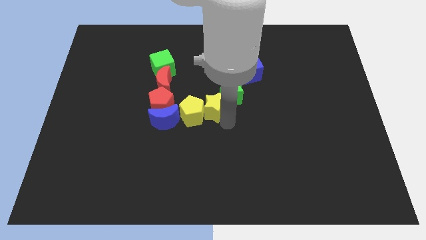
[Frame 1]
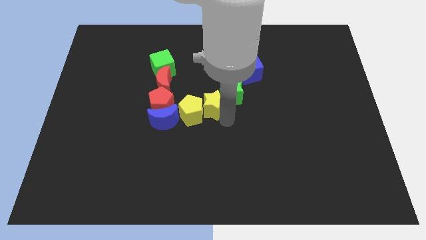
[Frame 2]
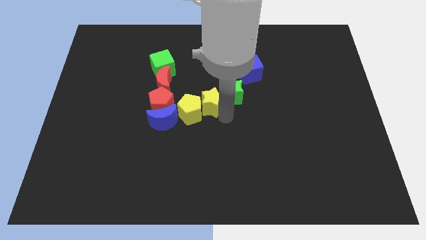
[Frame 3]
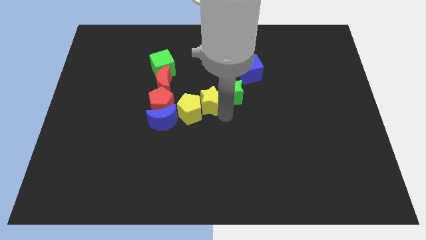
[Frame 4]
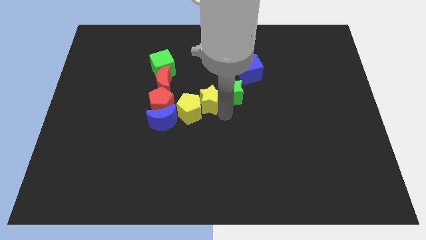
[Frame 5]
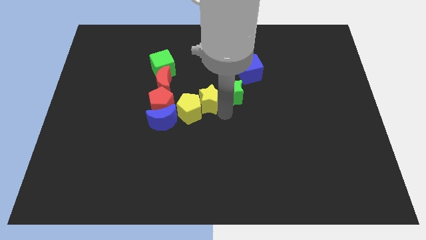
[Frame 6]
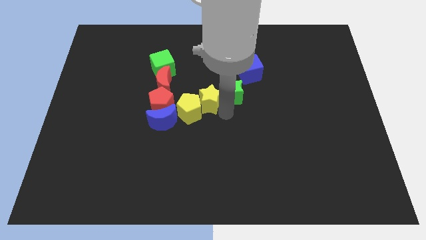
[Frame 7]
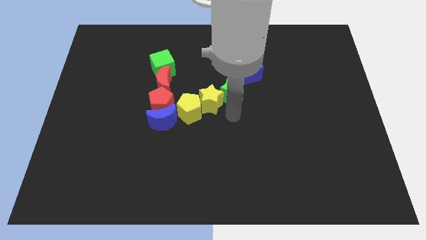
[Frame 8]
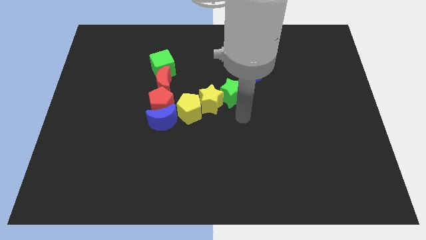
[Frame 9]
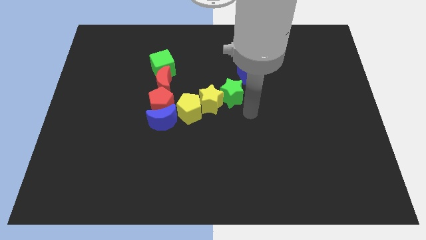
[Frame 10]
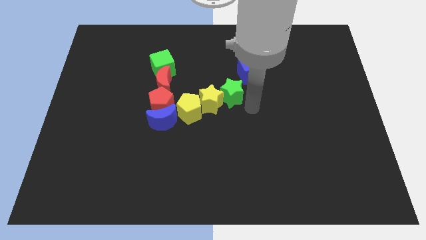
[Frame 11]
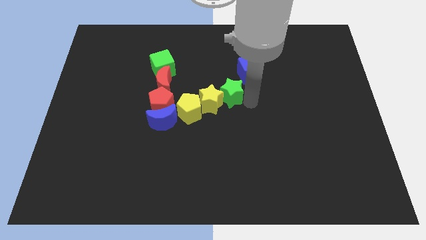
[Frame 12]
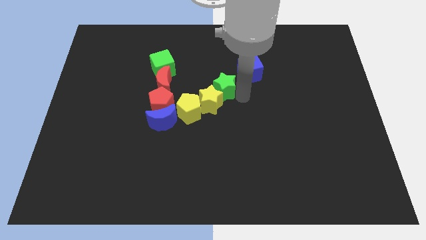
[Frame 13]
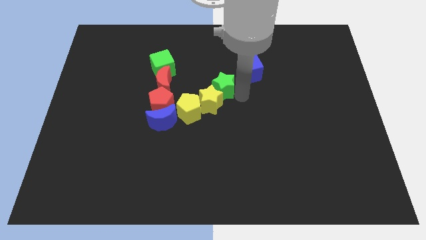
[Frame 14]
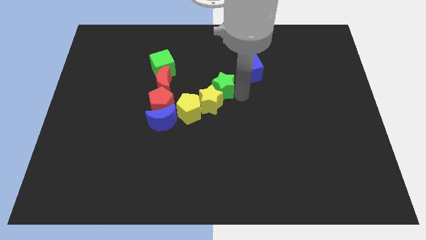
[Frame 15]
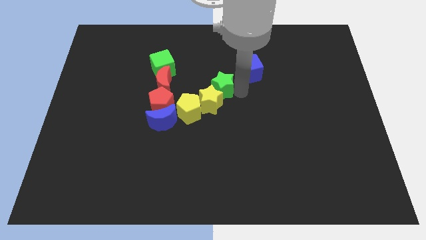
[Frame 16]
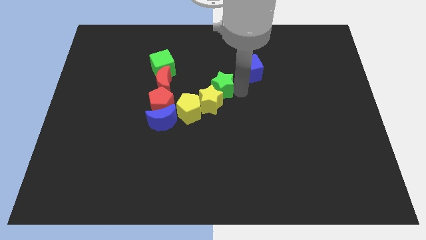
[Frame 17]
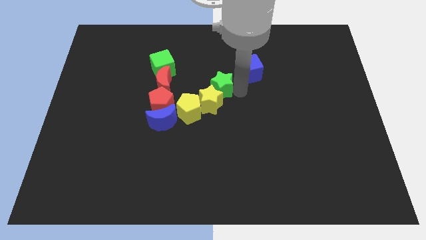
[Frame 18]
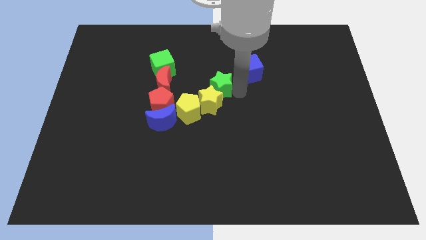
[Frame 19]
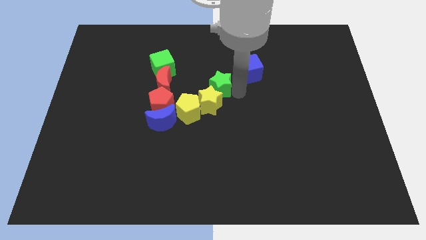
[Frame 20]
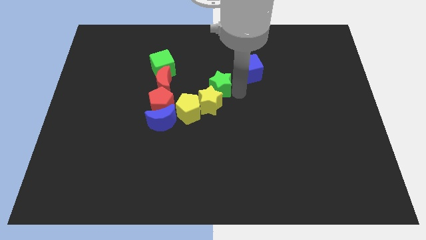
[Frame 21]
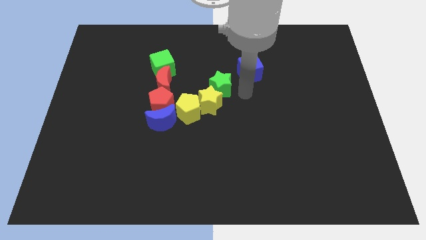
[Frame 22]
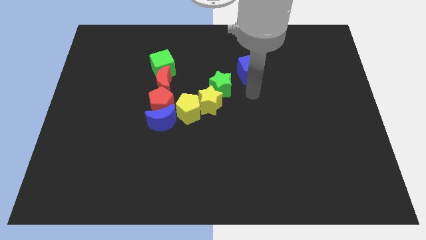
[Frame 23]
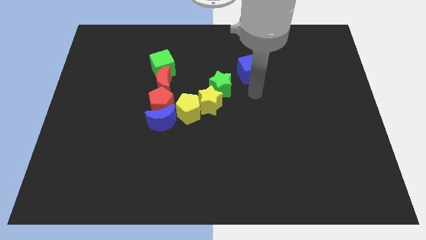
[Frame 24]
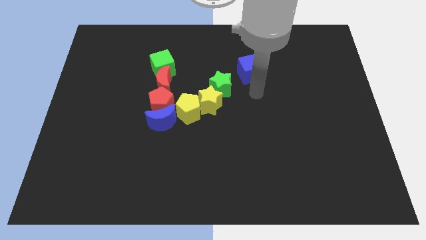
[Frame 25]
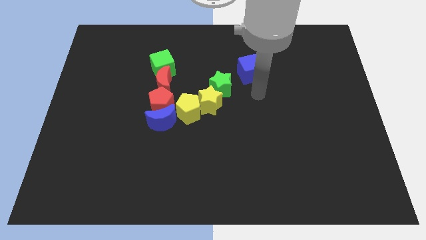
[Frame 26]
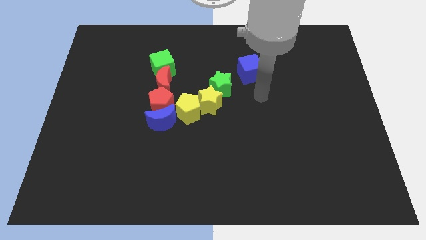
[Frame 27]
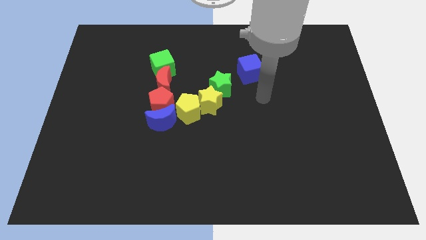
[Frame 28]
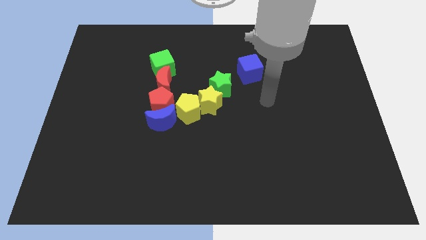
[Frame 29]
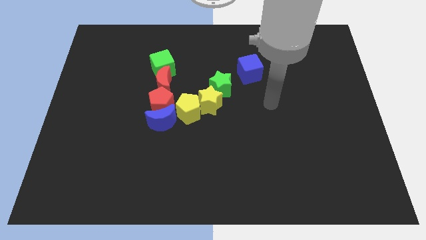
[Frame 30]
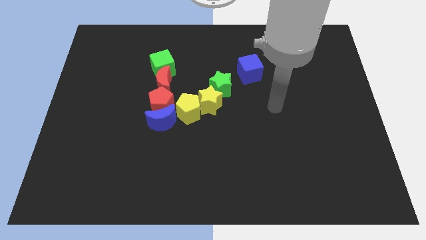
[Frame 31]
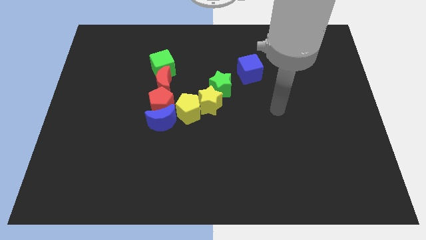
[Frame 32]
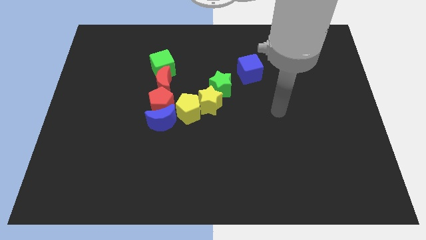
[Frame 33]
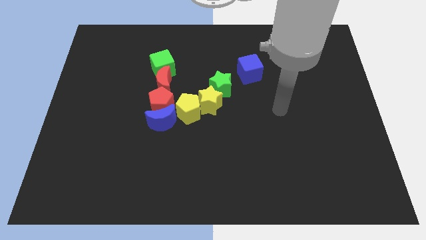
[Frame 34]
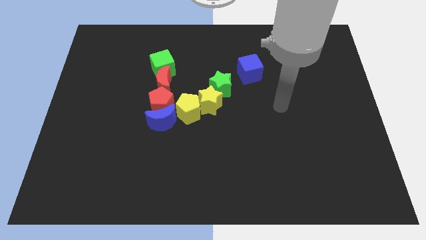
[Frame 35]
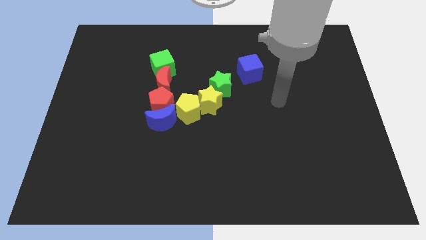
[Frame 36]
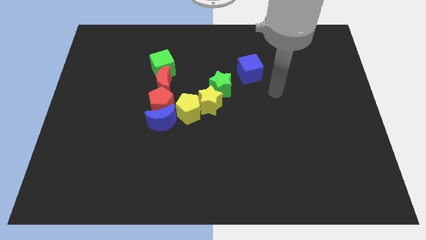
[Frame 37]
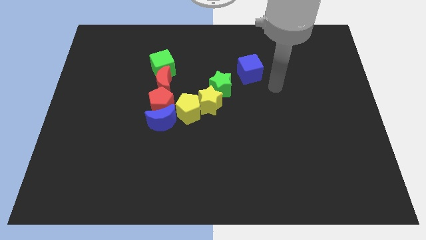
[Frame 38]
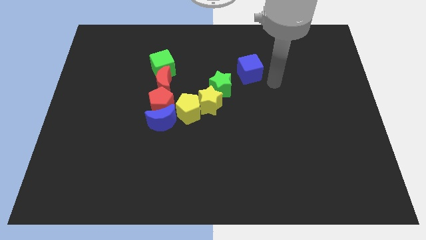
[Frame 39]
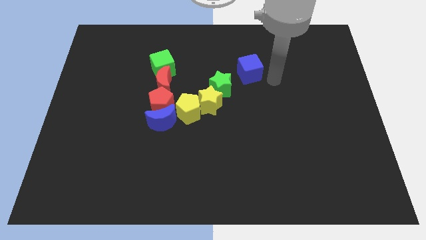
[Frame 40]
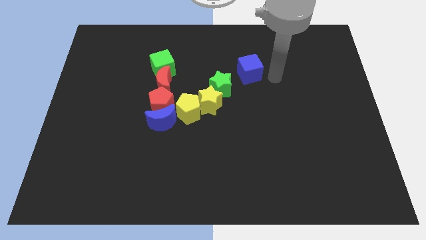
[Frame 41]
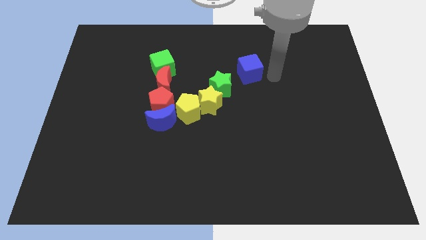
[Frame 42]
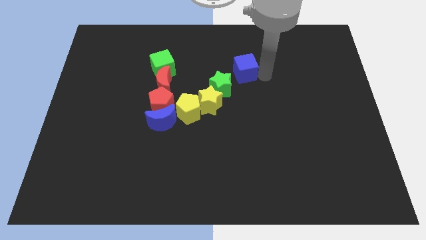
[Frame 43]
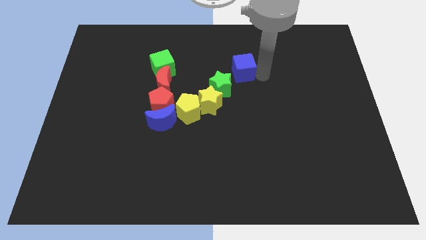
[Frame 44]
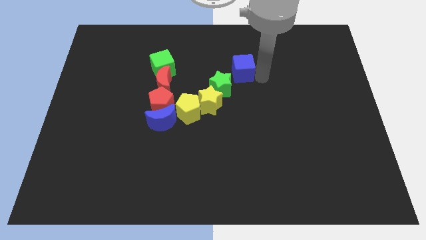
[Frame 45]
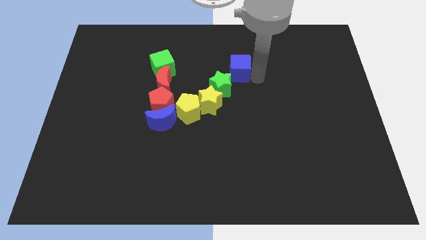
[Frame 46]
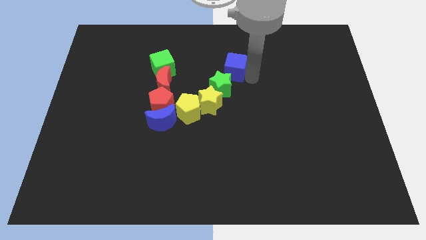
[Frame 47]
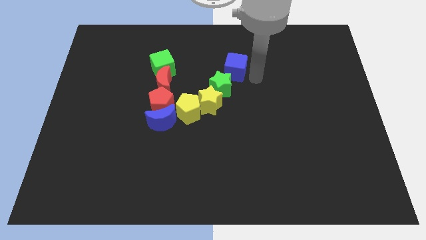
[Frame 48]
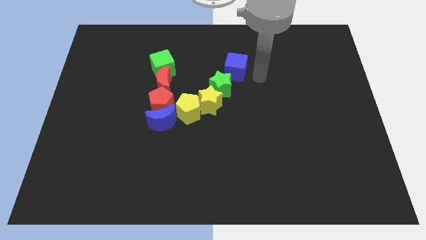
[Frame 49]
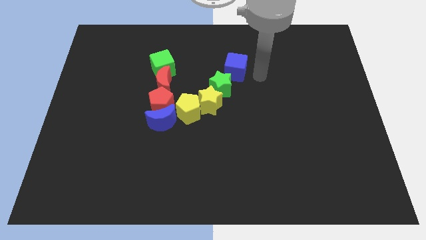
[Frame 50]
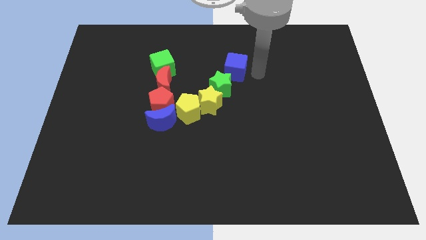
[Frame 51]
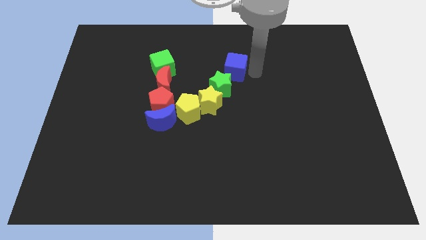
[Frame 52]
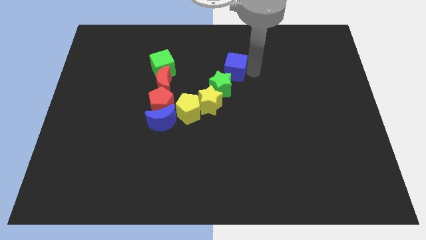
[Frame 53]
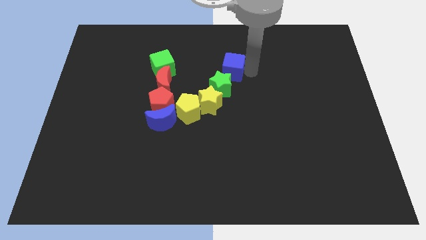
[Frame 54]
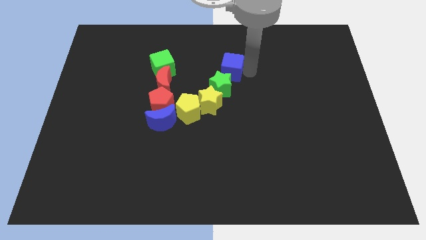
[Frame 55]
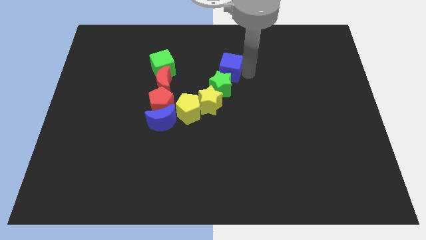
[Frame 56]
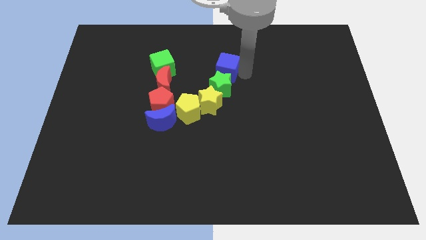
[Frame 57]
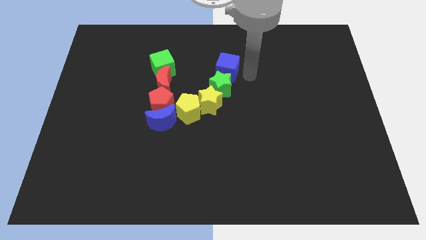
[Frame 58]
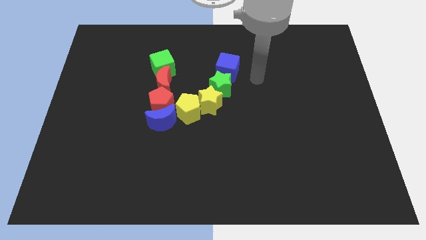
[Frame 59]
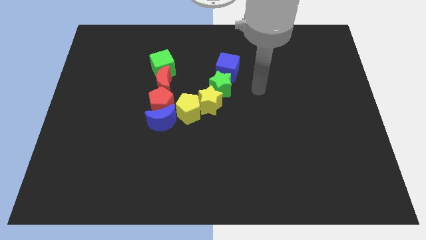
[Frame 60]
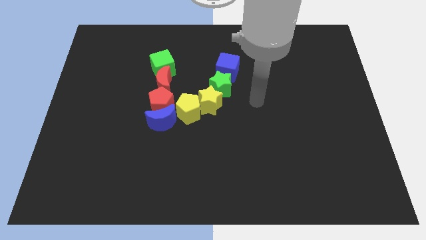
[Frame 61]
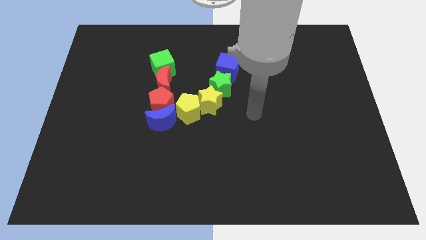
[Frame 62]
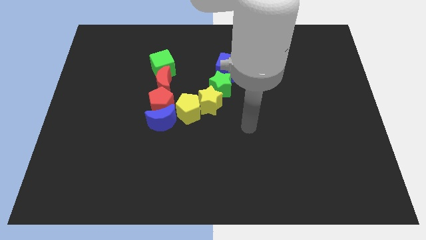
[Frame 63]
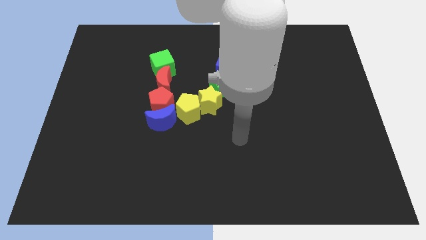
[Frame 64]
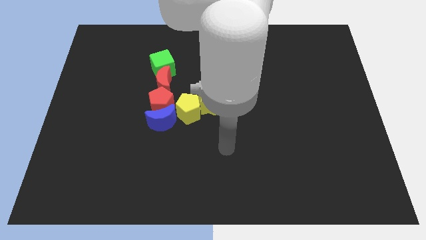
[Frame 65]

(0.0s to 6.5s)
move the group of blocks

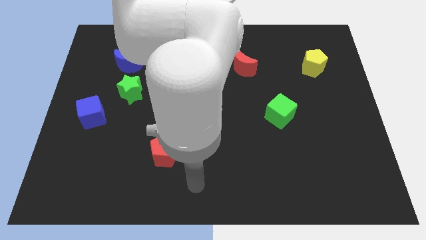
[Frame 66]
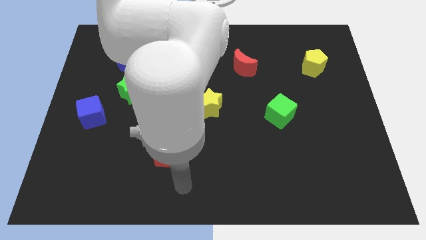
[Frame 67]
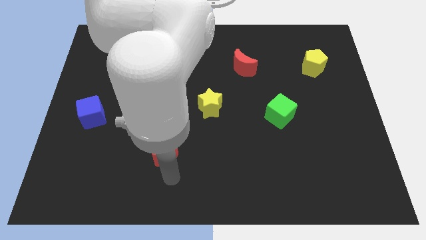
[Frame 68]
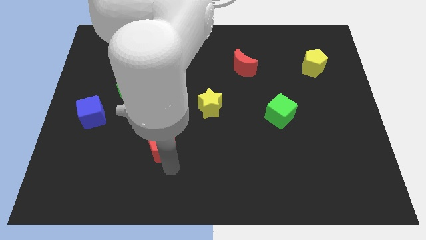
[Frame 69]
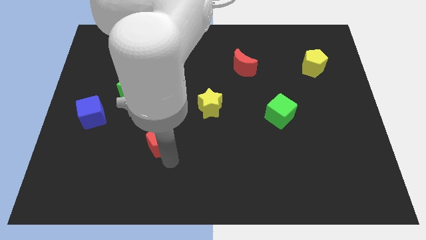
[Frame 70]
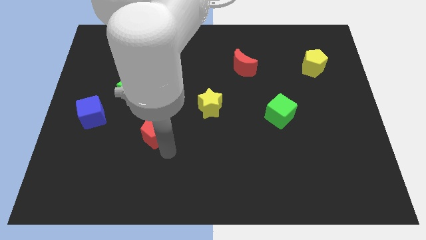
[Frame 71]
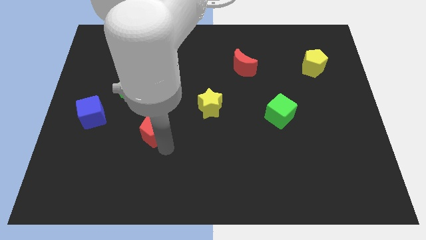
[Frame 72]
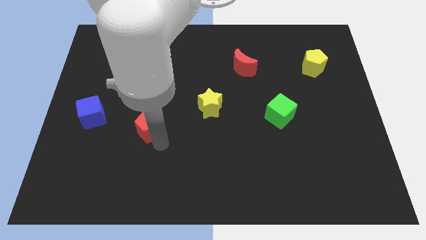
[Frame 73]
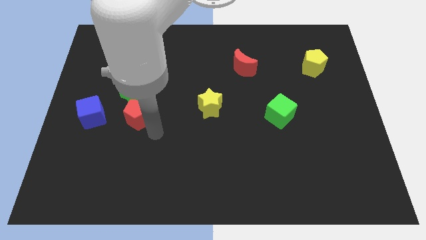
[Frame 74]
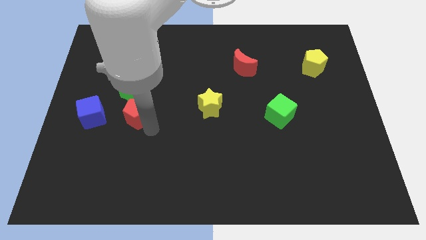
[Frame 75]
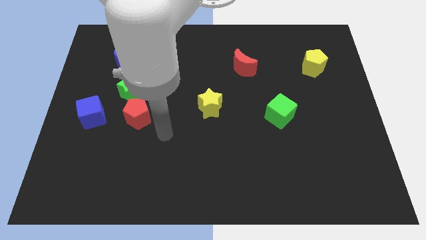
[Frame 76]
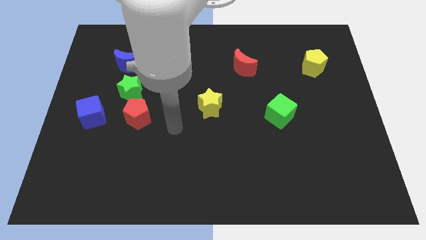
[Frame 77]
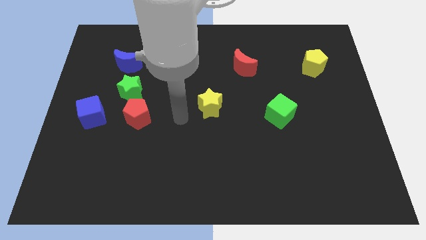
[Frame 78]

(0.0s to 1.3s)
drag the red pentagon close to the green star

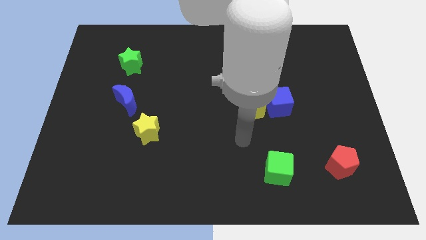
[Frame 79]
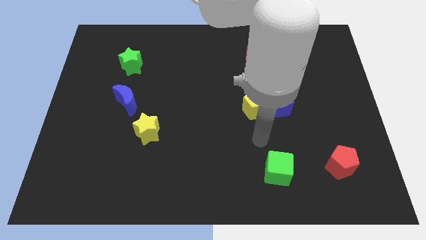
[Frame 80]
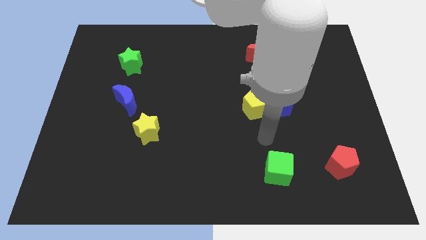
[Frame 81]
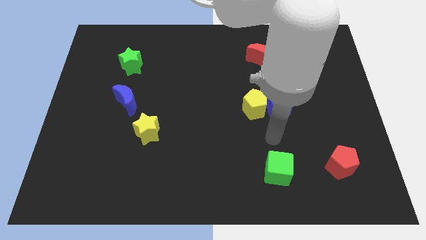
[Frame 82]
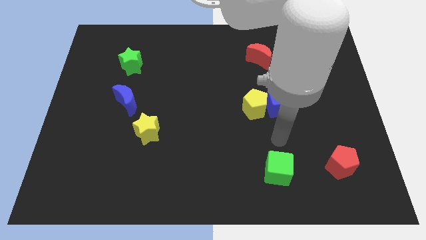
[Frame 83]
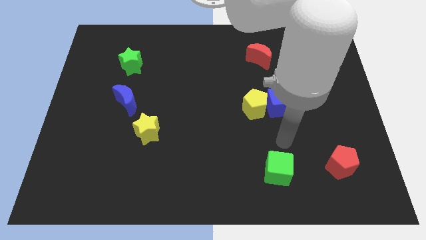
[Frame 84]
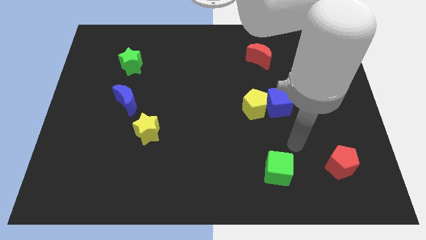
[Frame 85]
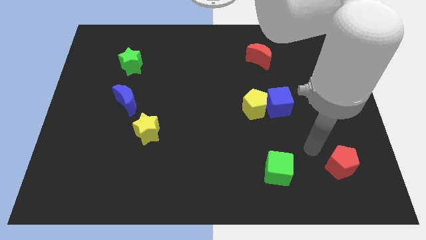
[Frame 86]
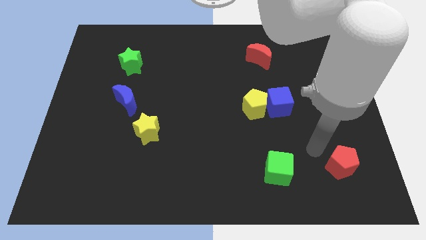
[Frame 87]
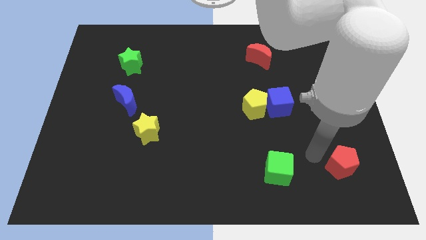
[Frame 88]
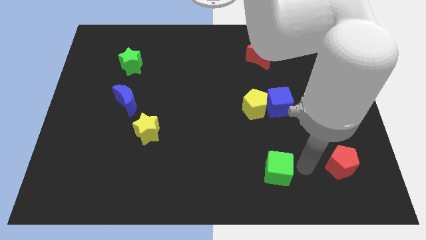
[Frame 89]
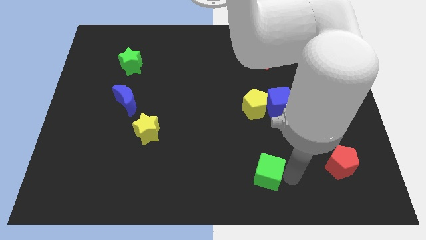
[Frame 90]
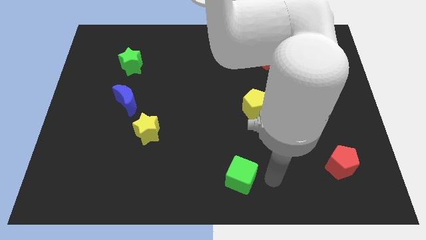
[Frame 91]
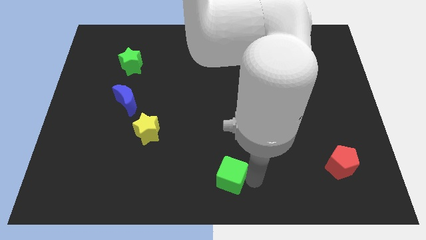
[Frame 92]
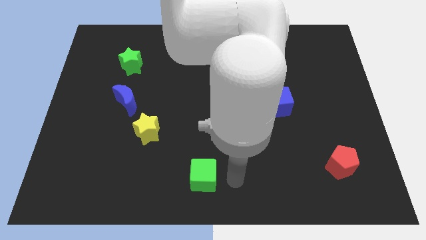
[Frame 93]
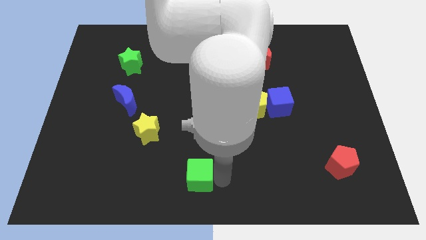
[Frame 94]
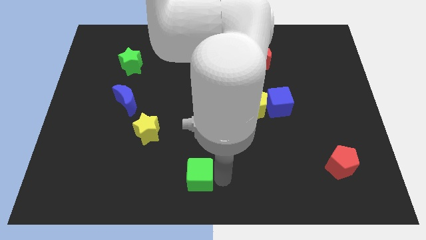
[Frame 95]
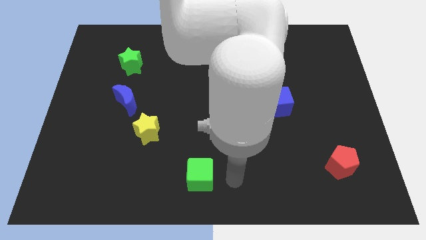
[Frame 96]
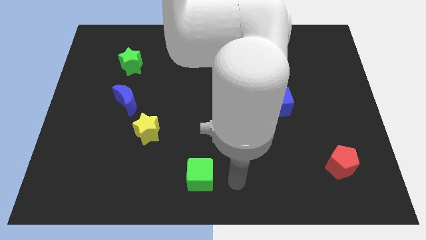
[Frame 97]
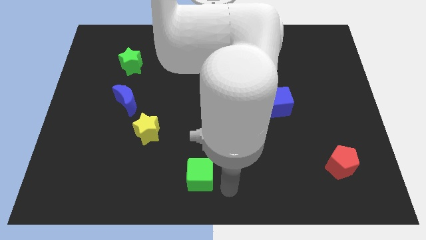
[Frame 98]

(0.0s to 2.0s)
push the green cube to the bottom center of the board
